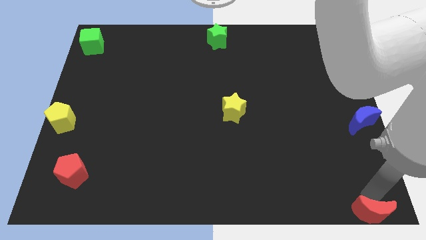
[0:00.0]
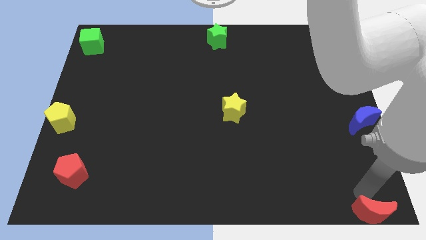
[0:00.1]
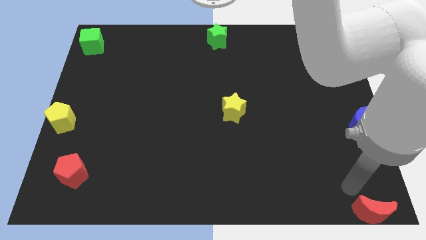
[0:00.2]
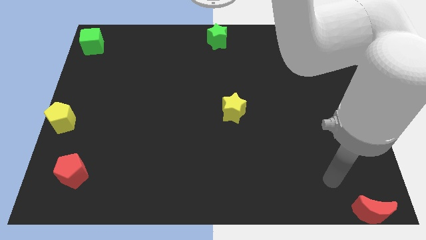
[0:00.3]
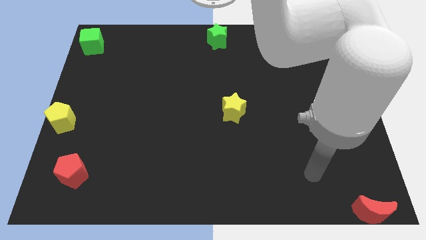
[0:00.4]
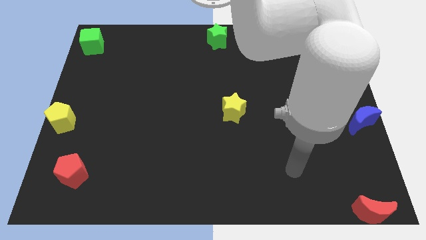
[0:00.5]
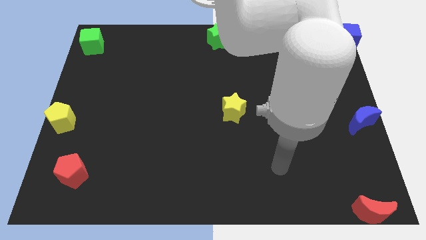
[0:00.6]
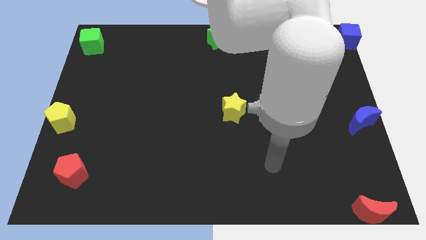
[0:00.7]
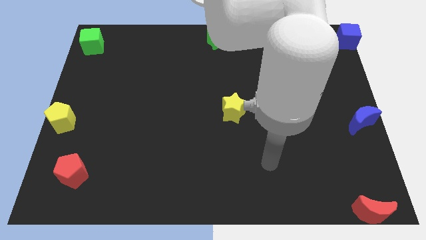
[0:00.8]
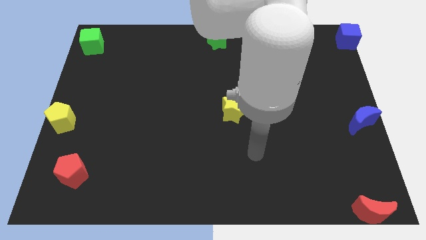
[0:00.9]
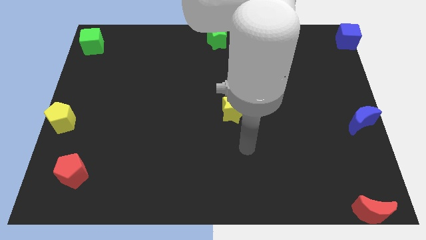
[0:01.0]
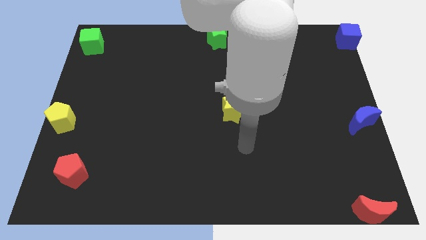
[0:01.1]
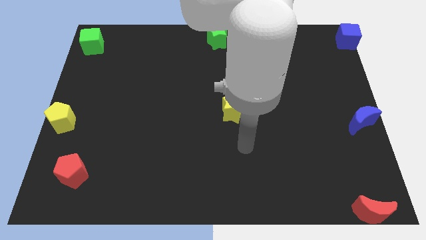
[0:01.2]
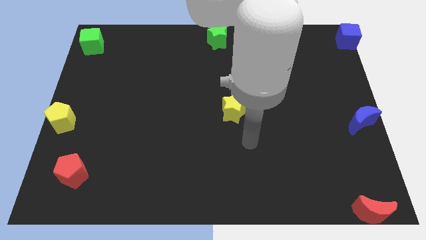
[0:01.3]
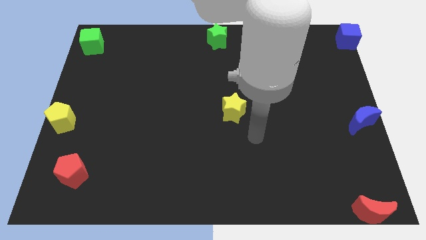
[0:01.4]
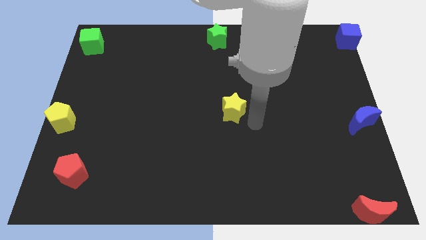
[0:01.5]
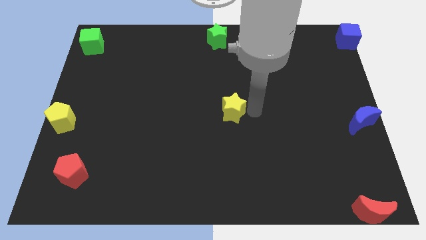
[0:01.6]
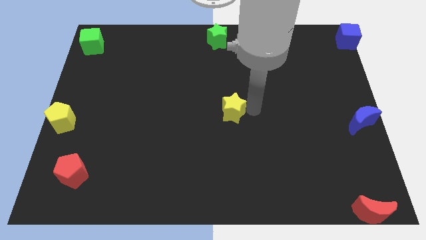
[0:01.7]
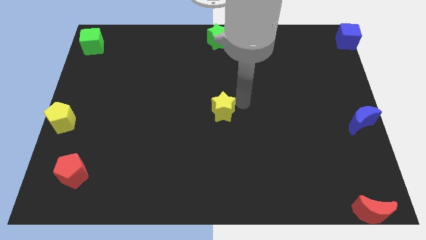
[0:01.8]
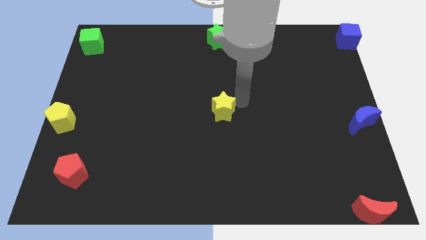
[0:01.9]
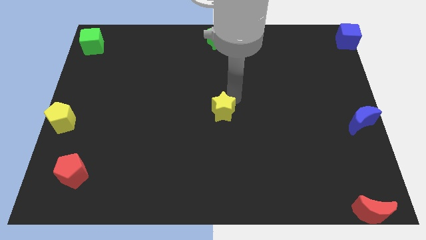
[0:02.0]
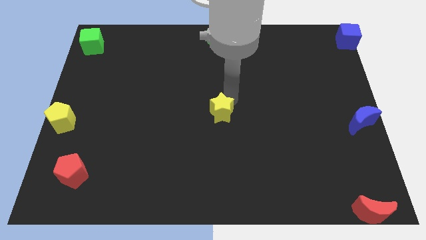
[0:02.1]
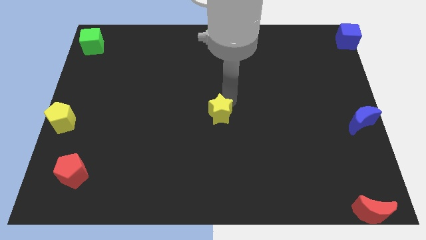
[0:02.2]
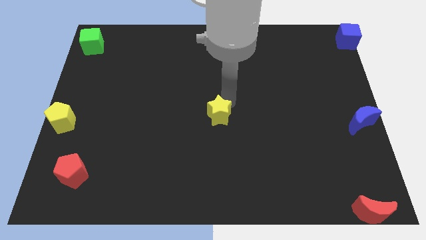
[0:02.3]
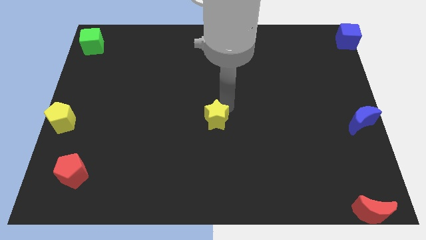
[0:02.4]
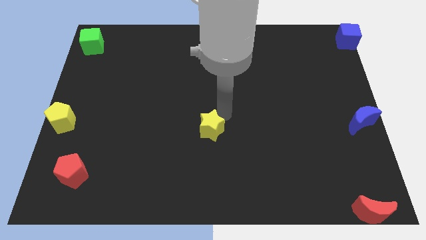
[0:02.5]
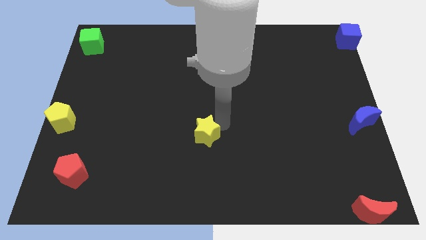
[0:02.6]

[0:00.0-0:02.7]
move the yellow star to the center of the board

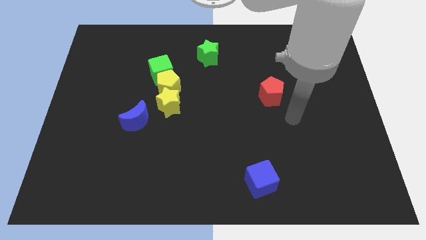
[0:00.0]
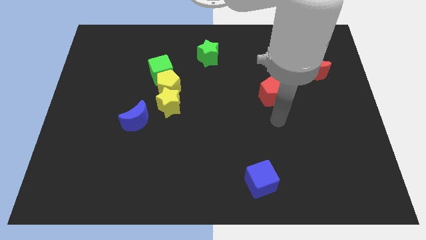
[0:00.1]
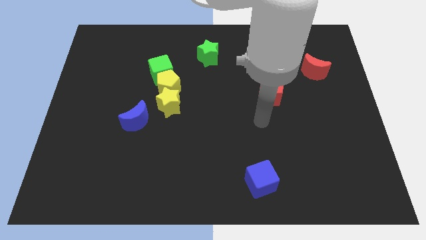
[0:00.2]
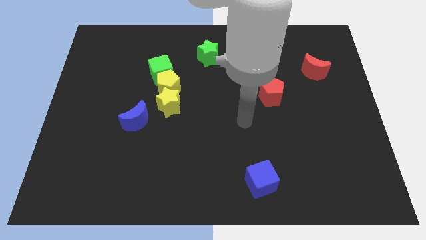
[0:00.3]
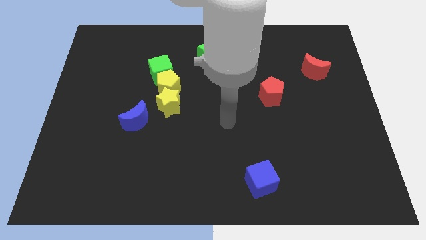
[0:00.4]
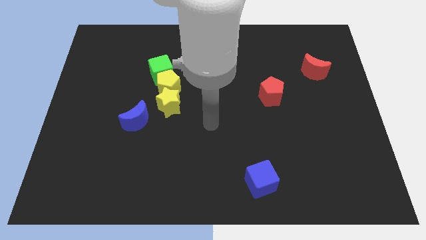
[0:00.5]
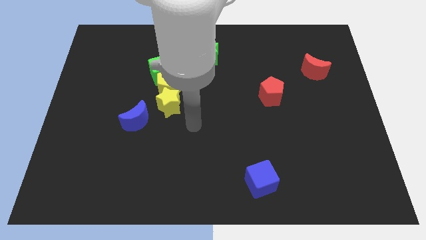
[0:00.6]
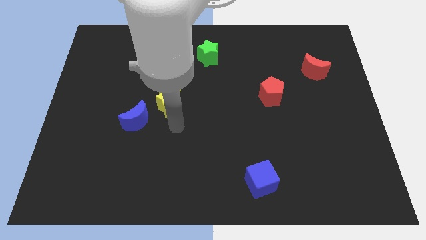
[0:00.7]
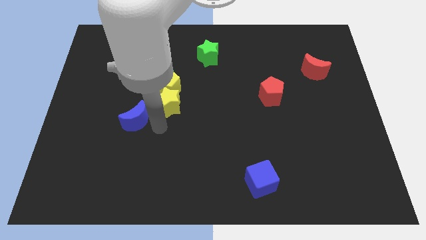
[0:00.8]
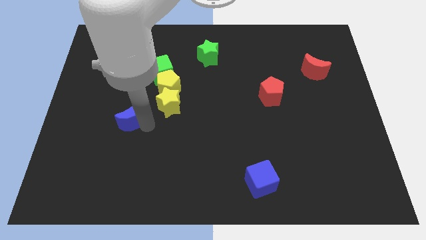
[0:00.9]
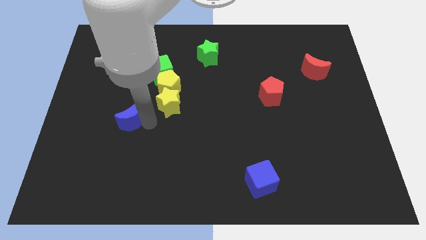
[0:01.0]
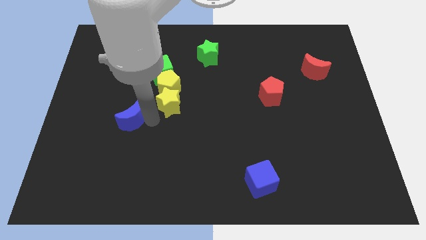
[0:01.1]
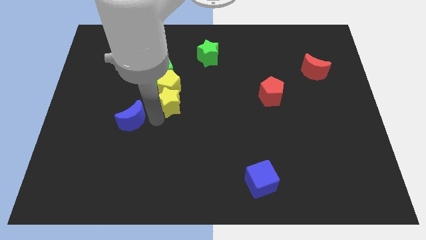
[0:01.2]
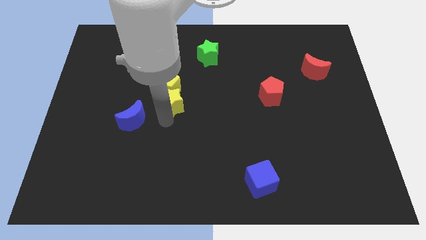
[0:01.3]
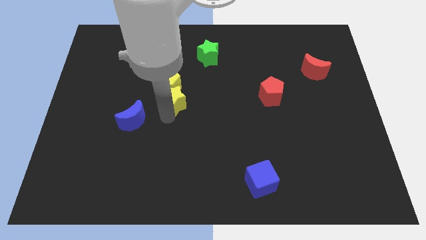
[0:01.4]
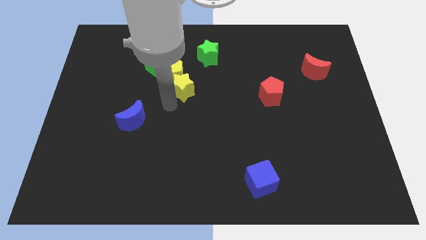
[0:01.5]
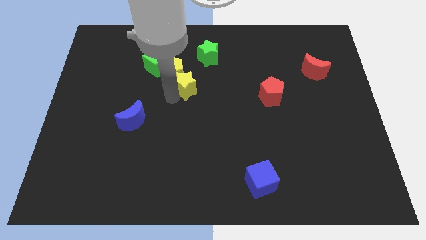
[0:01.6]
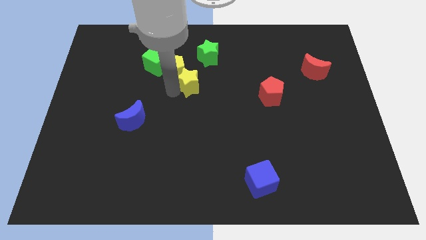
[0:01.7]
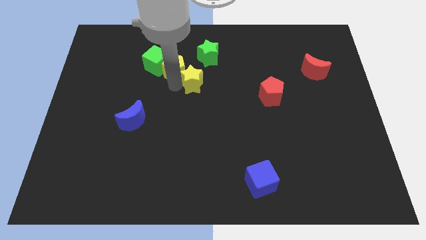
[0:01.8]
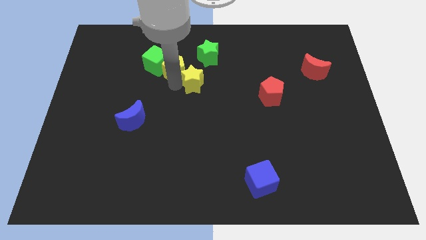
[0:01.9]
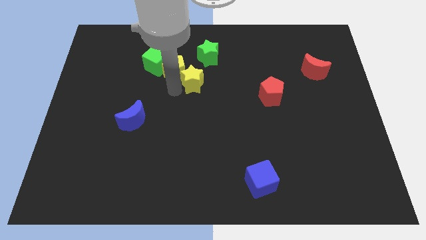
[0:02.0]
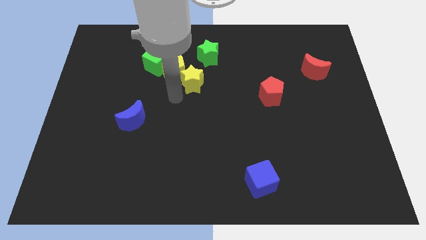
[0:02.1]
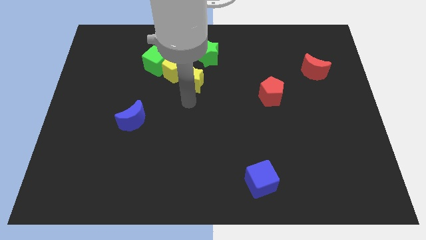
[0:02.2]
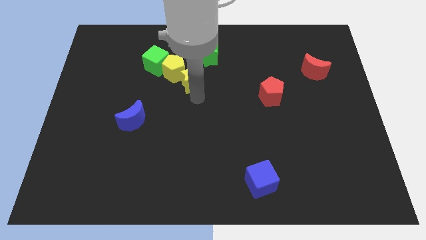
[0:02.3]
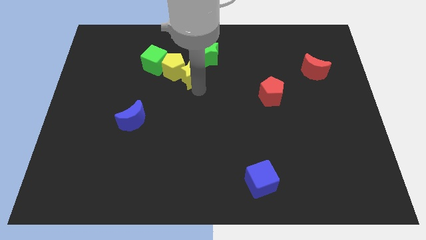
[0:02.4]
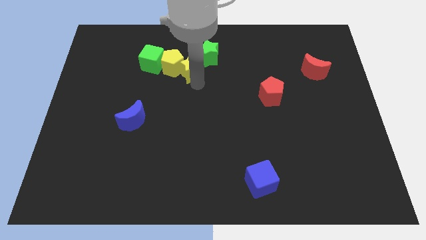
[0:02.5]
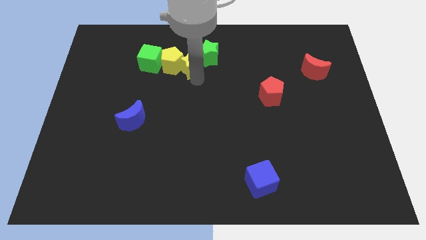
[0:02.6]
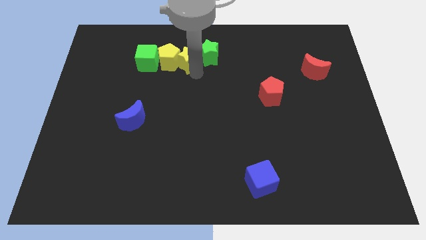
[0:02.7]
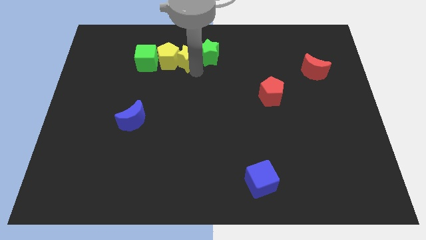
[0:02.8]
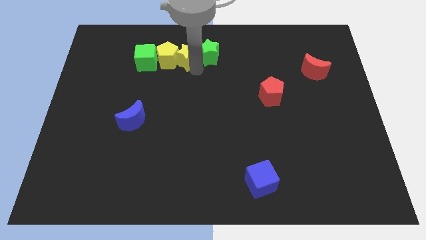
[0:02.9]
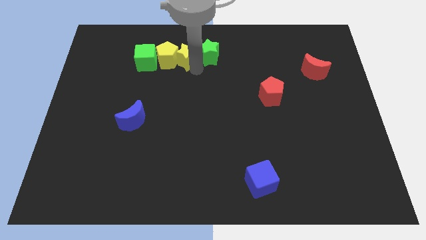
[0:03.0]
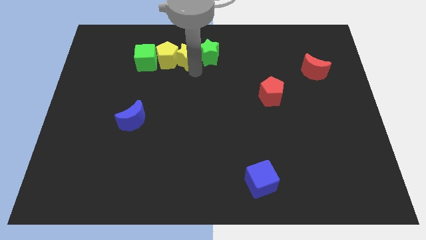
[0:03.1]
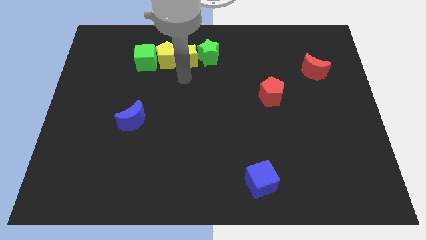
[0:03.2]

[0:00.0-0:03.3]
place yellow star in between yellow pentagon and green star

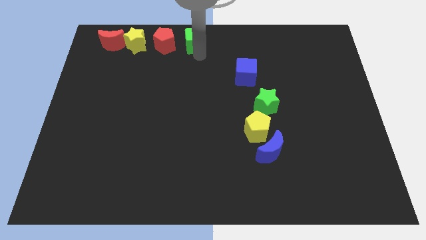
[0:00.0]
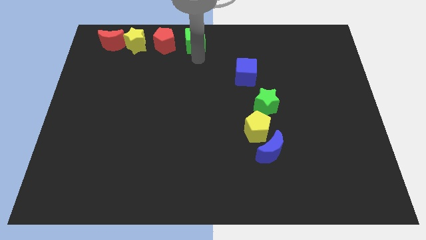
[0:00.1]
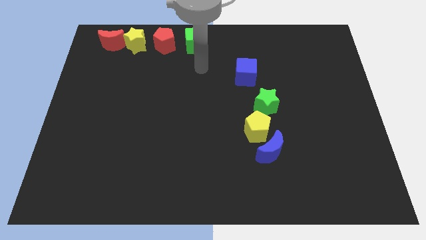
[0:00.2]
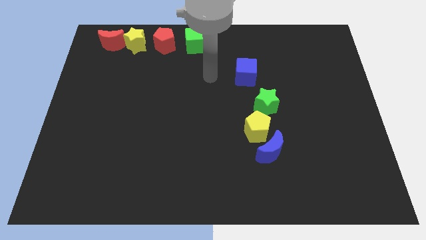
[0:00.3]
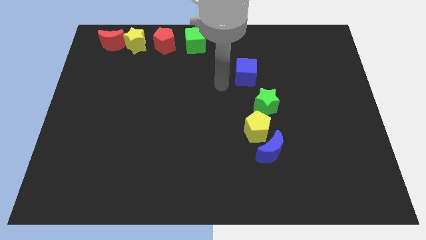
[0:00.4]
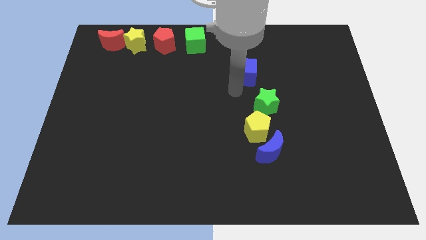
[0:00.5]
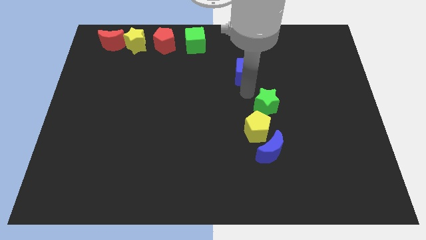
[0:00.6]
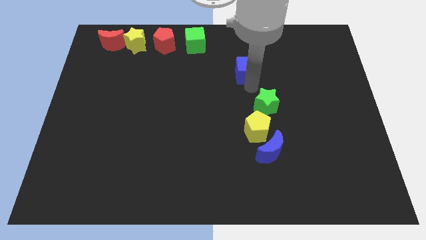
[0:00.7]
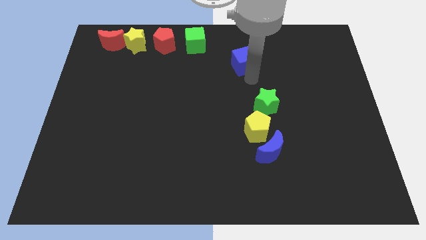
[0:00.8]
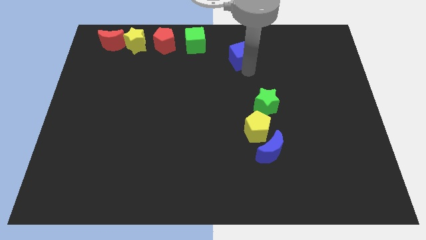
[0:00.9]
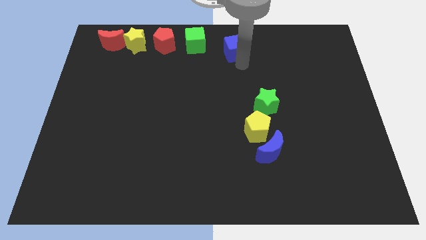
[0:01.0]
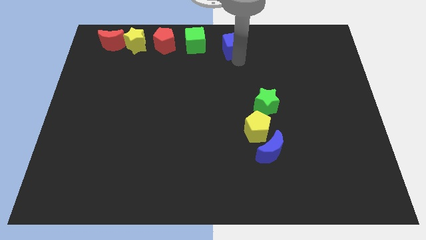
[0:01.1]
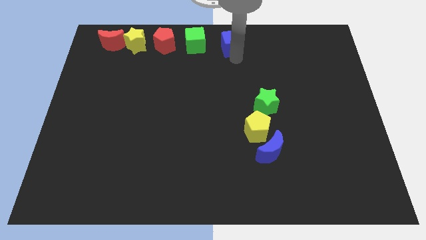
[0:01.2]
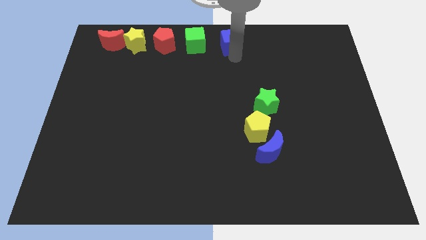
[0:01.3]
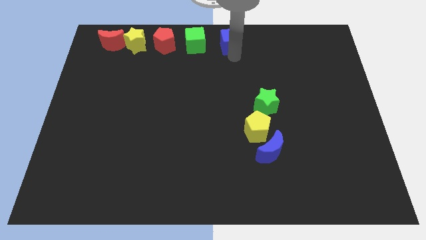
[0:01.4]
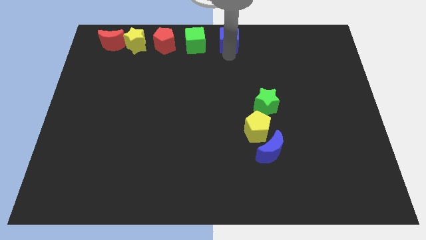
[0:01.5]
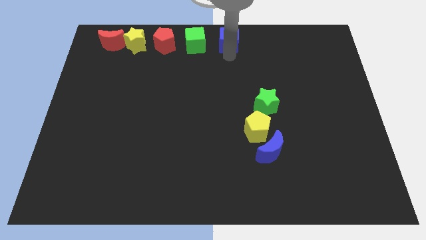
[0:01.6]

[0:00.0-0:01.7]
move the blue cube to the right of the green cube

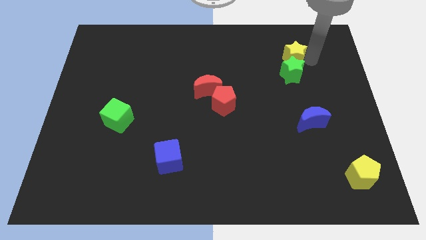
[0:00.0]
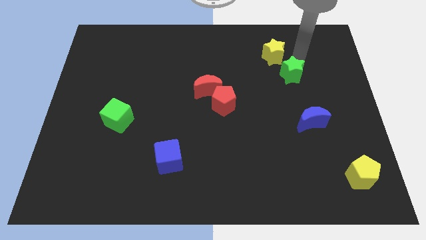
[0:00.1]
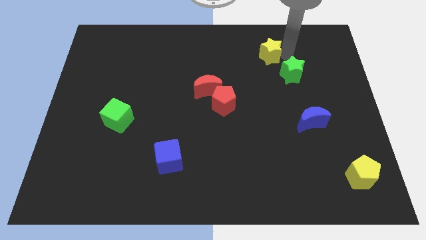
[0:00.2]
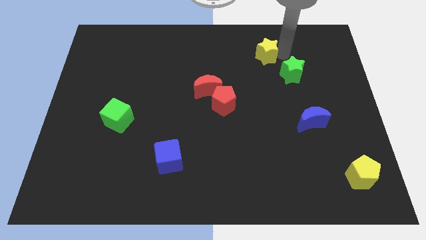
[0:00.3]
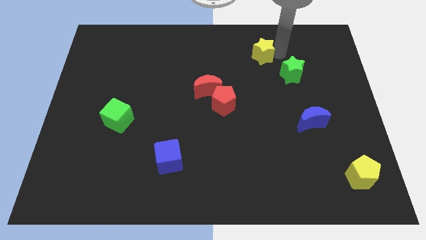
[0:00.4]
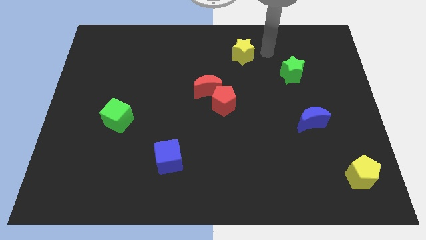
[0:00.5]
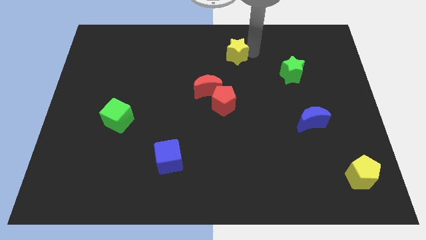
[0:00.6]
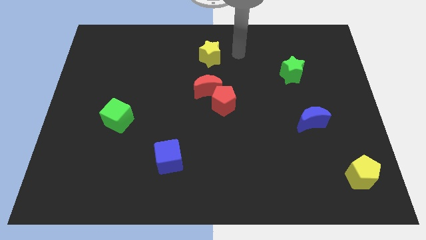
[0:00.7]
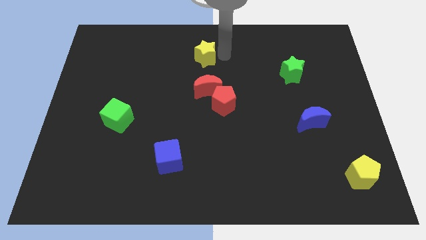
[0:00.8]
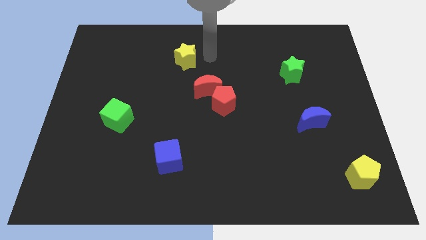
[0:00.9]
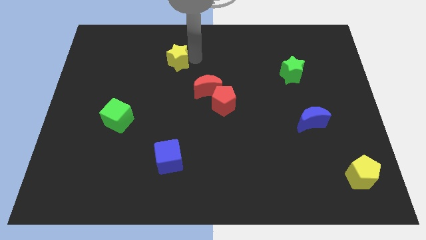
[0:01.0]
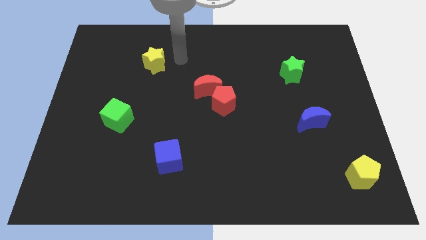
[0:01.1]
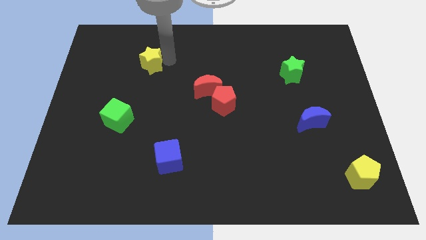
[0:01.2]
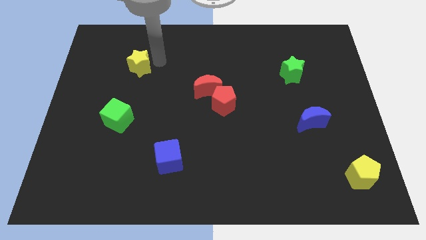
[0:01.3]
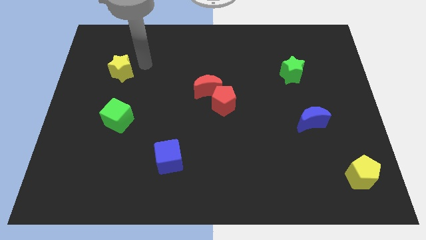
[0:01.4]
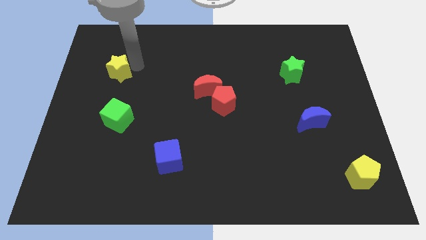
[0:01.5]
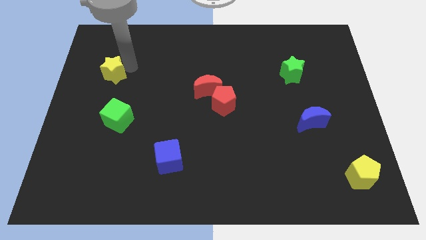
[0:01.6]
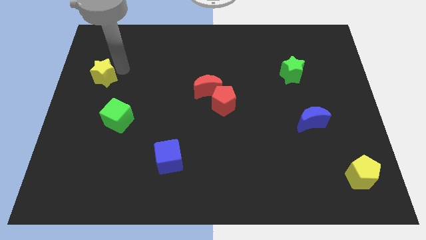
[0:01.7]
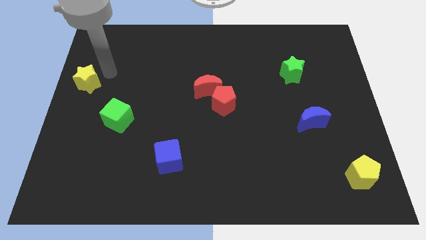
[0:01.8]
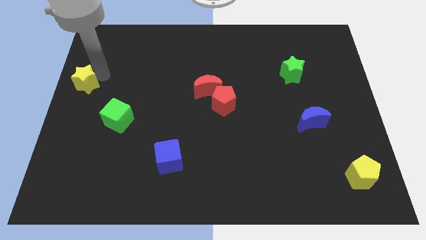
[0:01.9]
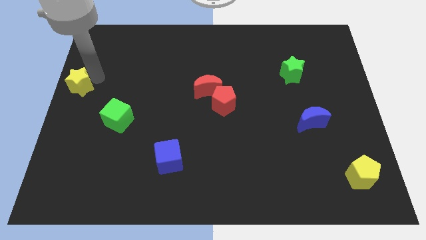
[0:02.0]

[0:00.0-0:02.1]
push the yellow star to the left center
